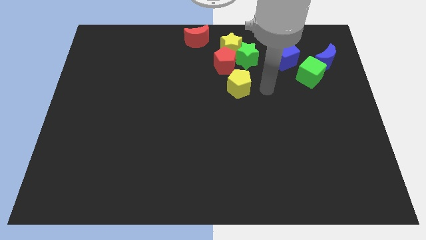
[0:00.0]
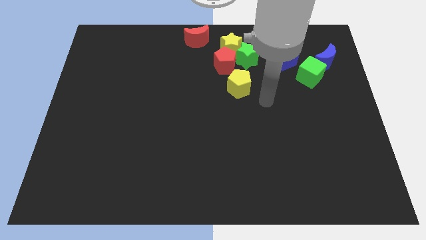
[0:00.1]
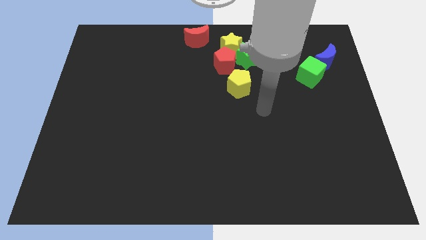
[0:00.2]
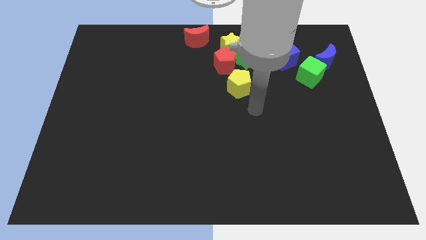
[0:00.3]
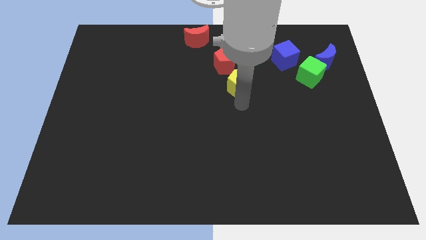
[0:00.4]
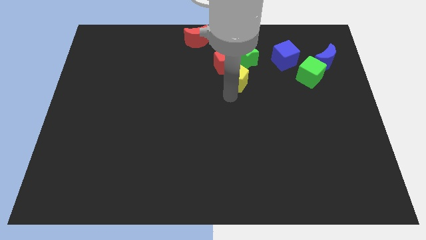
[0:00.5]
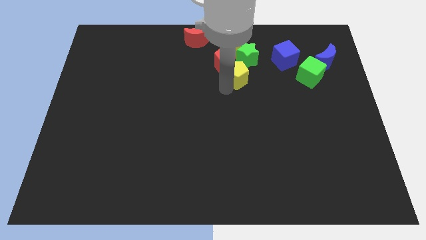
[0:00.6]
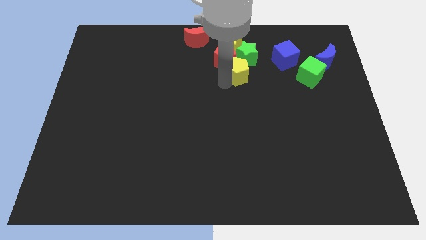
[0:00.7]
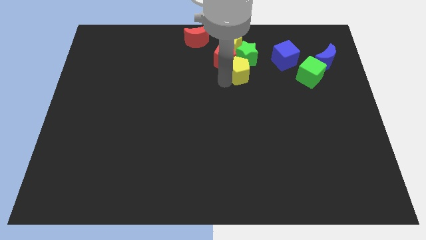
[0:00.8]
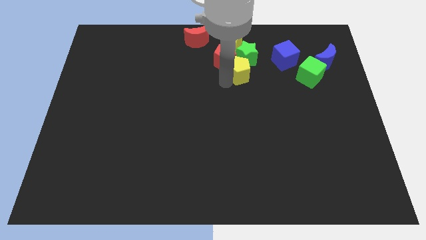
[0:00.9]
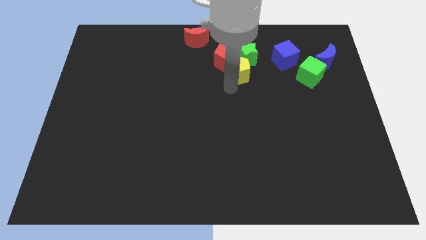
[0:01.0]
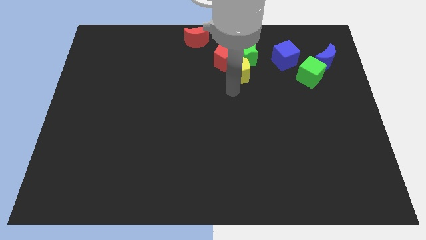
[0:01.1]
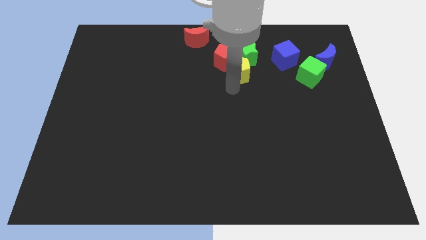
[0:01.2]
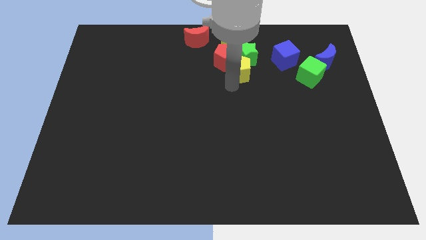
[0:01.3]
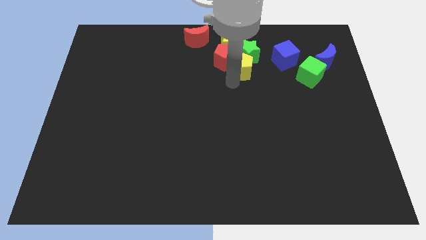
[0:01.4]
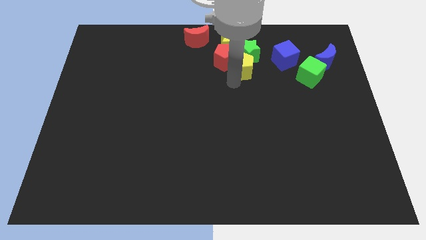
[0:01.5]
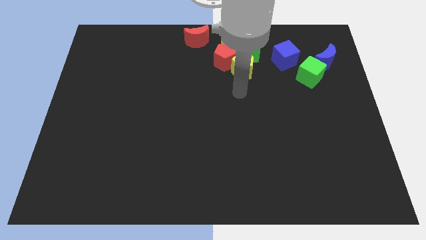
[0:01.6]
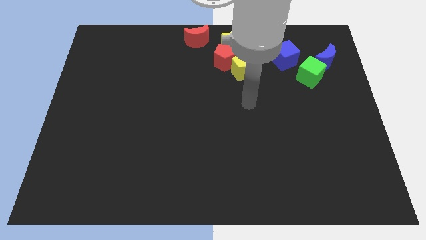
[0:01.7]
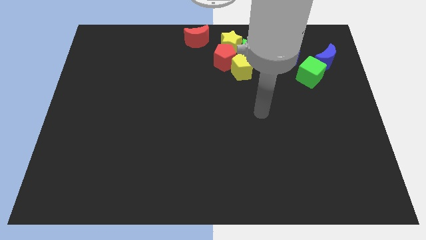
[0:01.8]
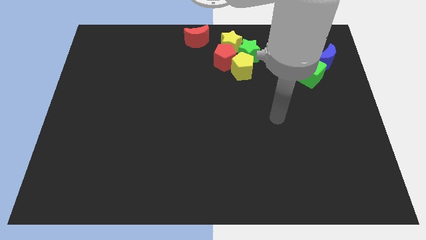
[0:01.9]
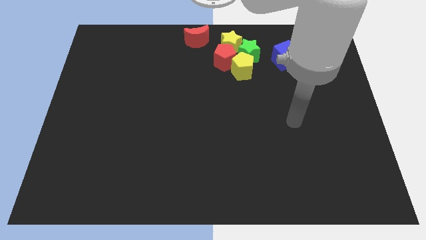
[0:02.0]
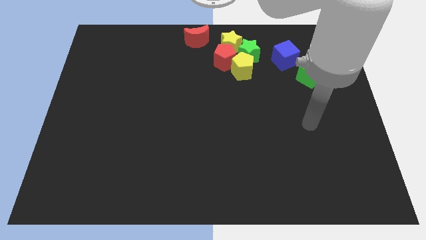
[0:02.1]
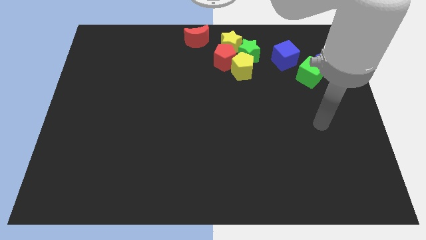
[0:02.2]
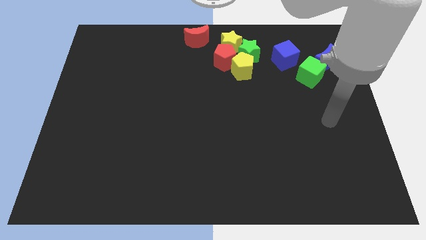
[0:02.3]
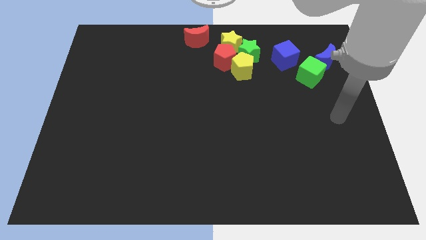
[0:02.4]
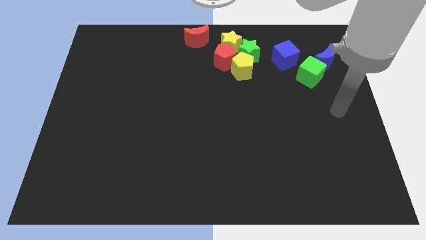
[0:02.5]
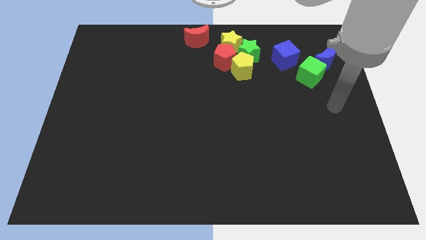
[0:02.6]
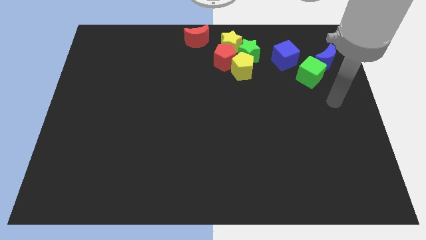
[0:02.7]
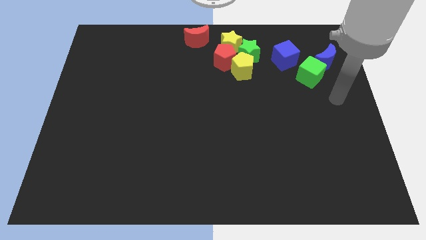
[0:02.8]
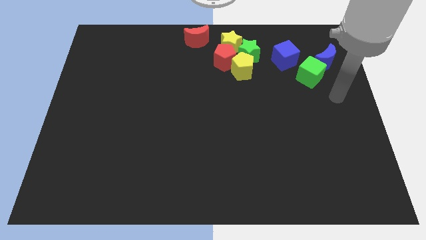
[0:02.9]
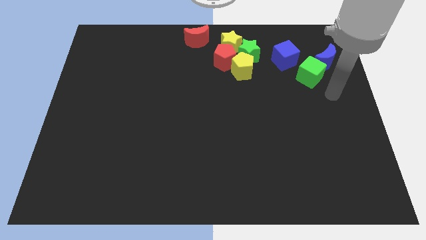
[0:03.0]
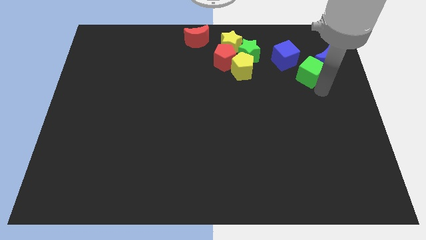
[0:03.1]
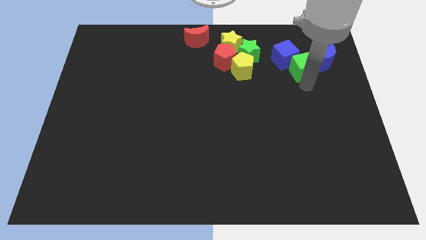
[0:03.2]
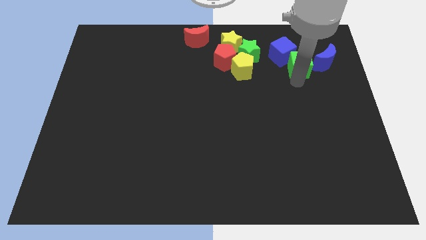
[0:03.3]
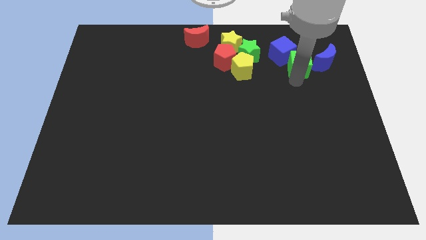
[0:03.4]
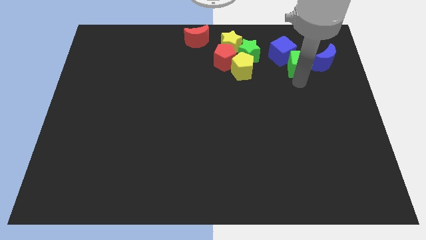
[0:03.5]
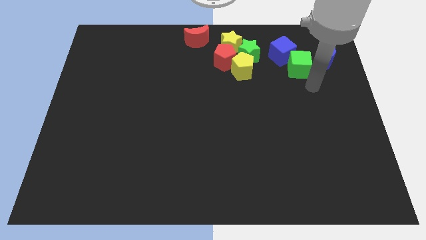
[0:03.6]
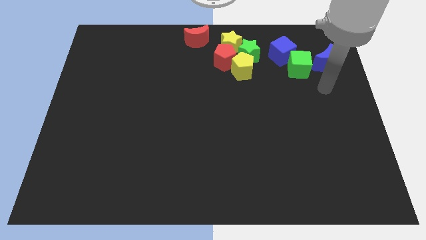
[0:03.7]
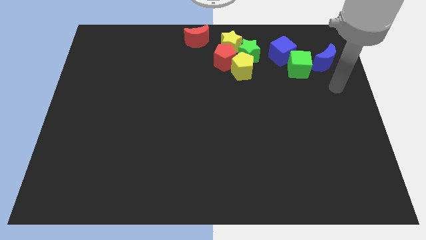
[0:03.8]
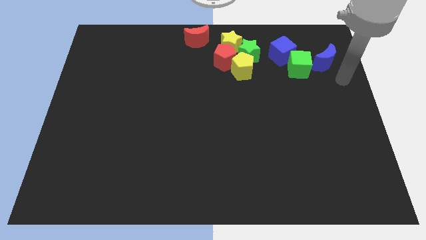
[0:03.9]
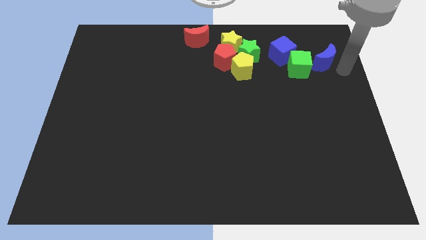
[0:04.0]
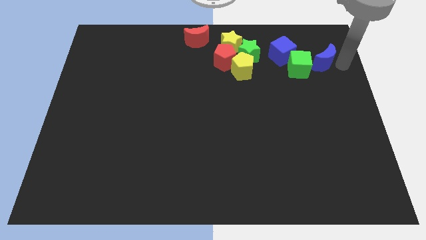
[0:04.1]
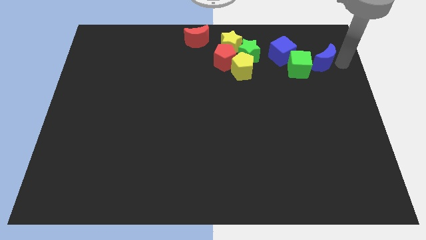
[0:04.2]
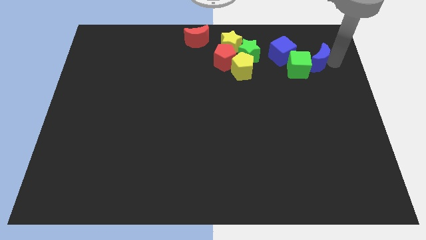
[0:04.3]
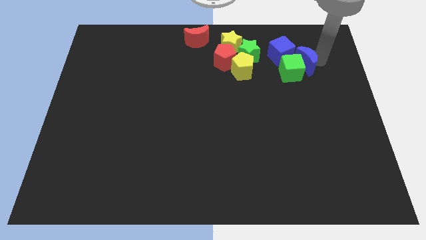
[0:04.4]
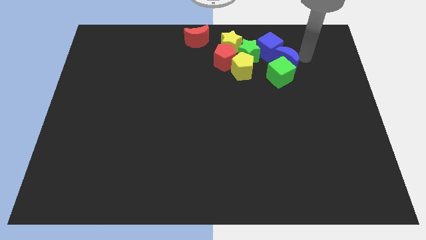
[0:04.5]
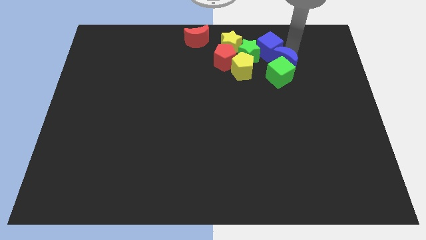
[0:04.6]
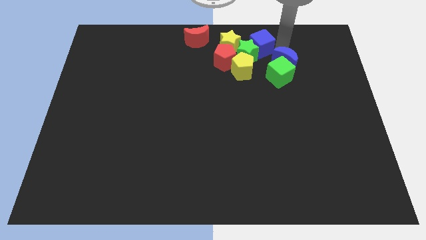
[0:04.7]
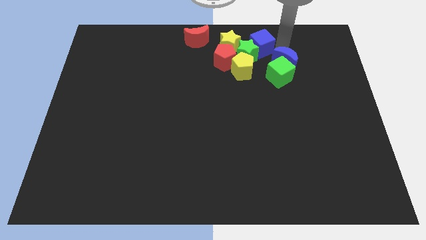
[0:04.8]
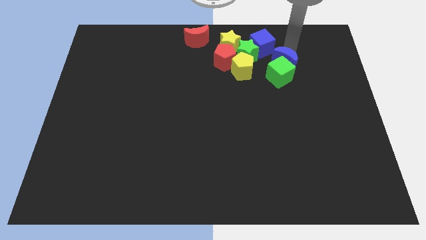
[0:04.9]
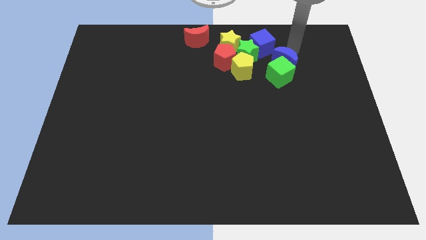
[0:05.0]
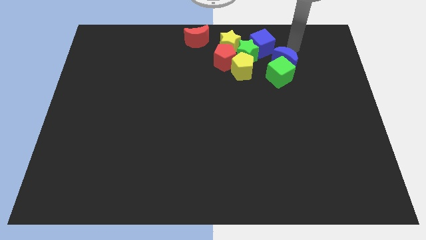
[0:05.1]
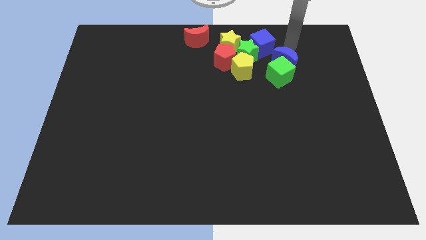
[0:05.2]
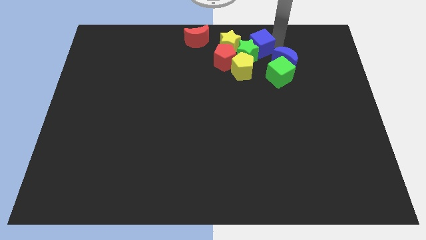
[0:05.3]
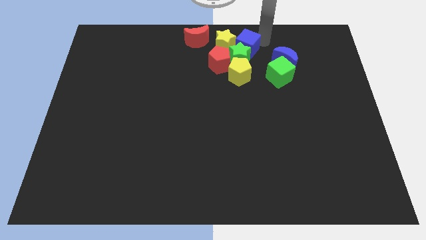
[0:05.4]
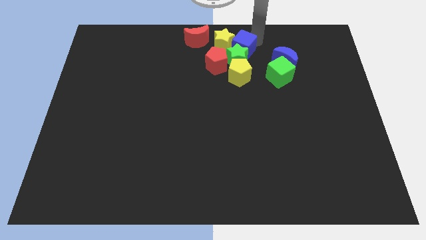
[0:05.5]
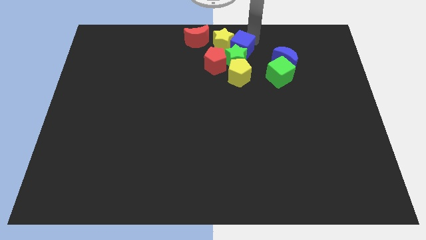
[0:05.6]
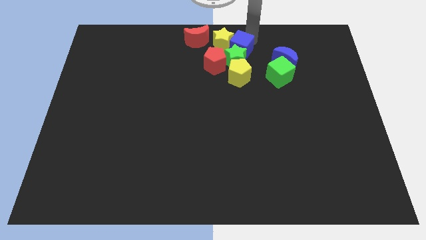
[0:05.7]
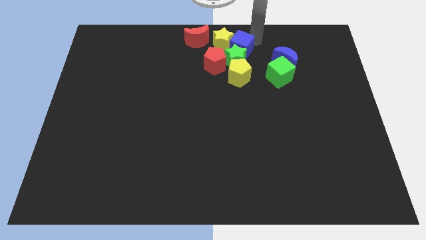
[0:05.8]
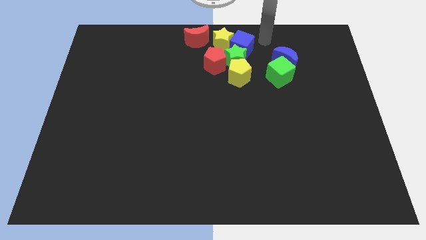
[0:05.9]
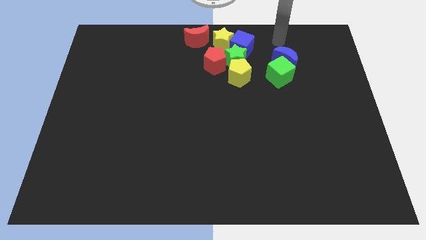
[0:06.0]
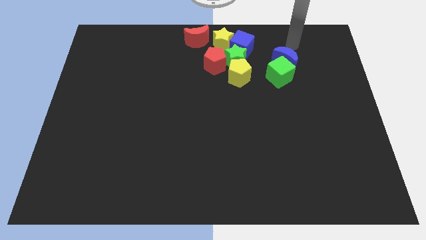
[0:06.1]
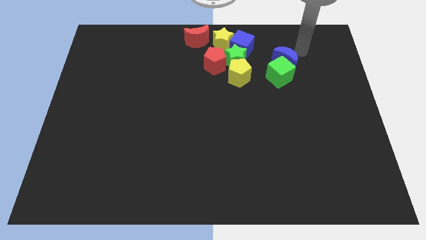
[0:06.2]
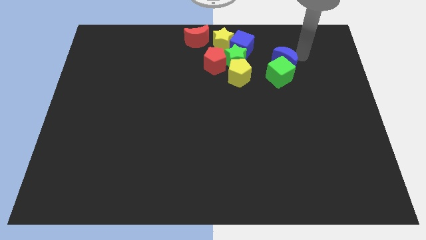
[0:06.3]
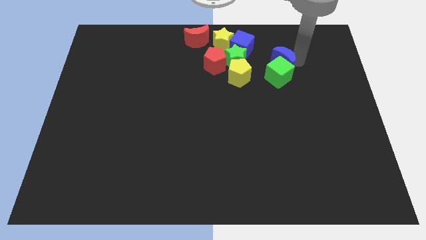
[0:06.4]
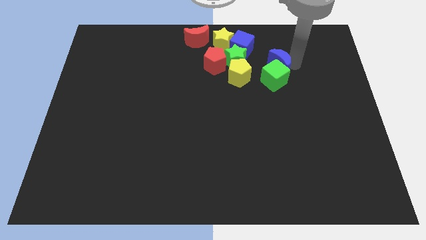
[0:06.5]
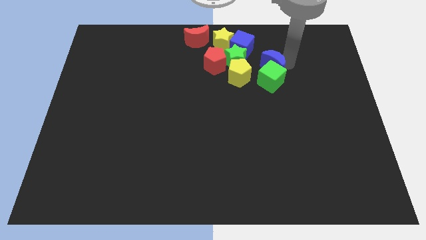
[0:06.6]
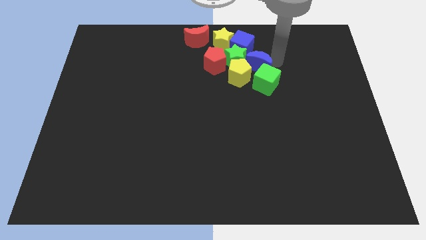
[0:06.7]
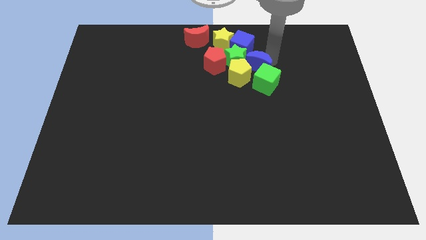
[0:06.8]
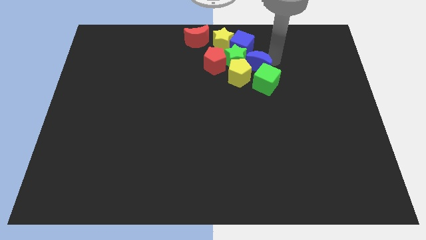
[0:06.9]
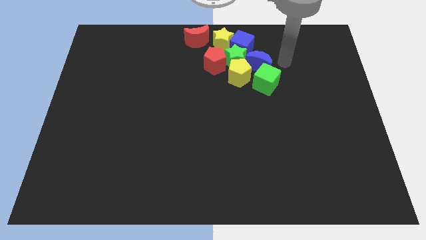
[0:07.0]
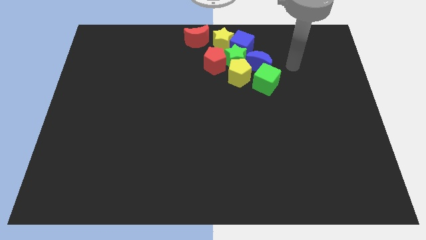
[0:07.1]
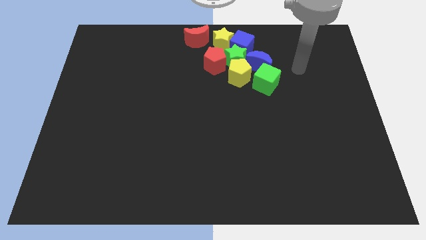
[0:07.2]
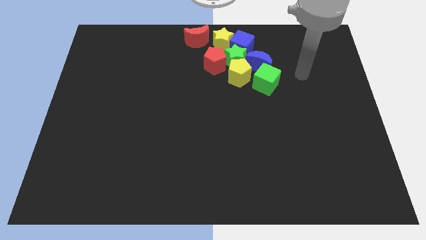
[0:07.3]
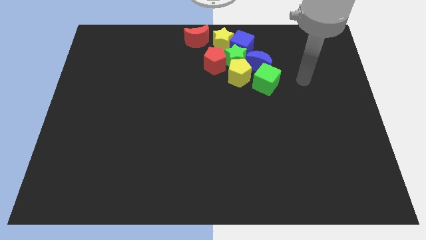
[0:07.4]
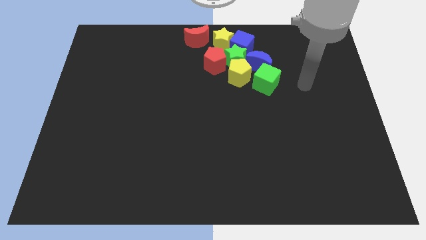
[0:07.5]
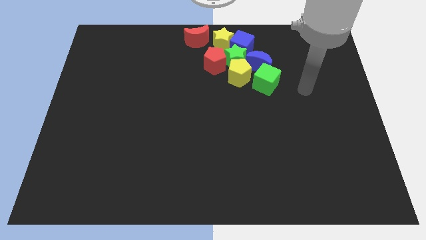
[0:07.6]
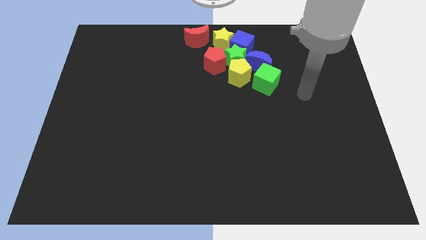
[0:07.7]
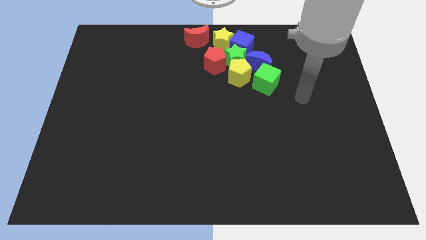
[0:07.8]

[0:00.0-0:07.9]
push the yellow pentagon towards the red pentagon

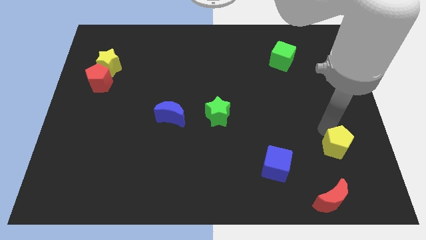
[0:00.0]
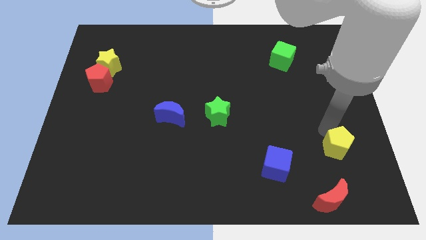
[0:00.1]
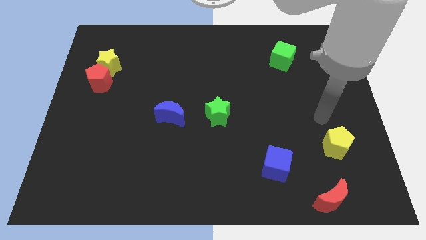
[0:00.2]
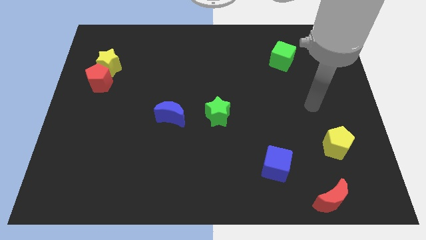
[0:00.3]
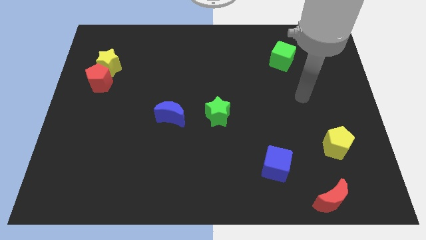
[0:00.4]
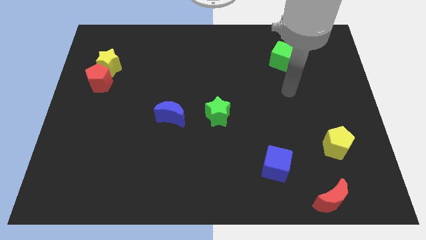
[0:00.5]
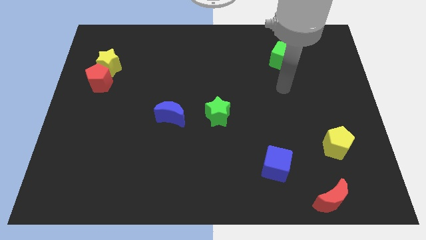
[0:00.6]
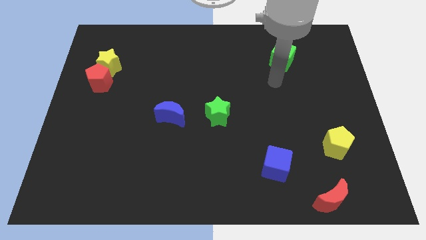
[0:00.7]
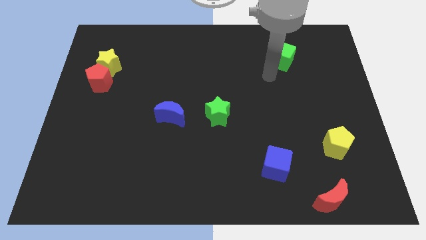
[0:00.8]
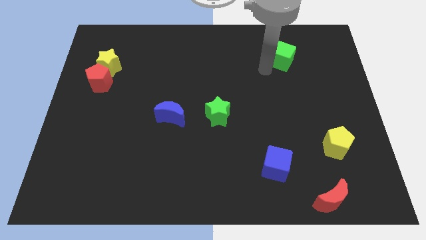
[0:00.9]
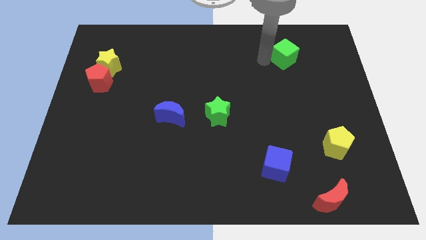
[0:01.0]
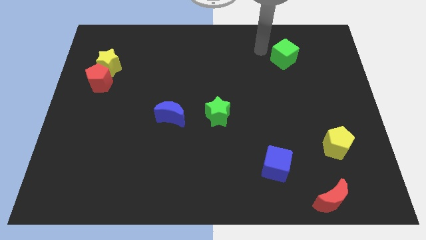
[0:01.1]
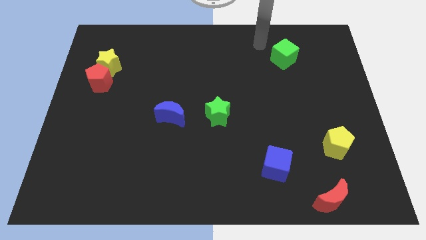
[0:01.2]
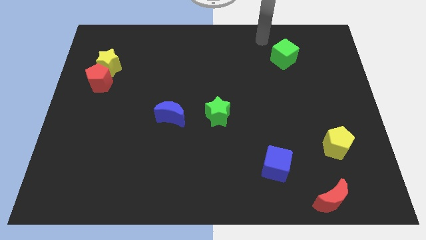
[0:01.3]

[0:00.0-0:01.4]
slightly push green cube towards the right side
